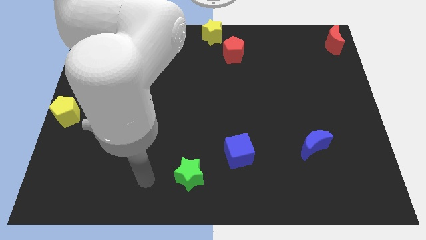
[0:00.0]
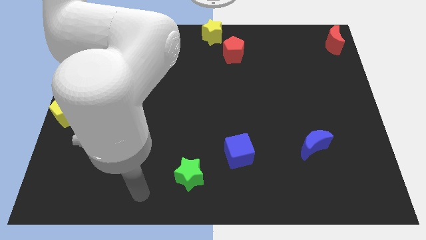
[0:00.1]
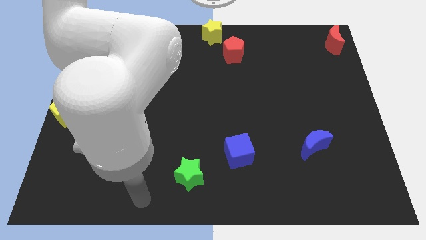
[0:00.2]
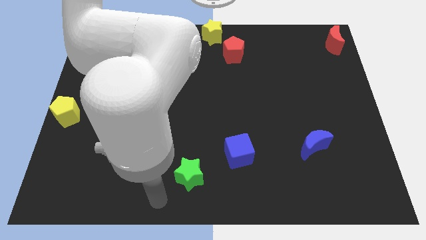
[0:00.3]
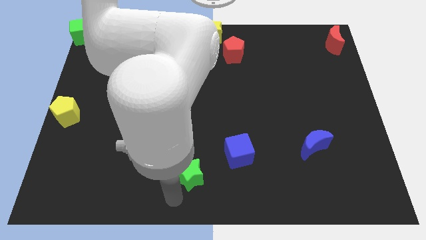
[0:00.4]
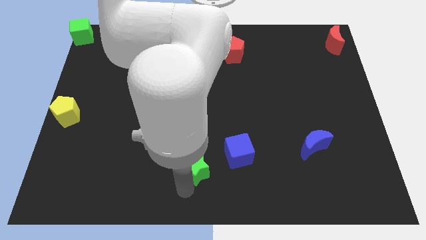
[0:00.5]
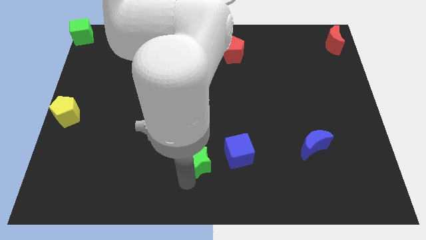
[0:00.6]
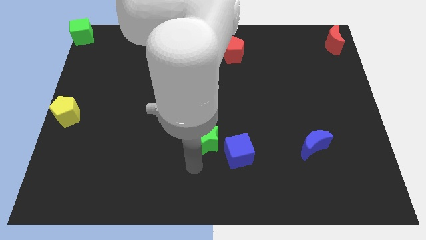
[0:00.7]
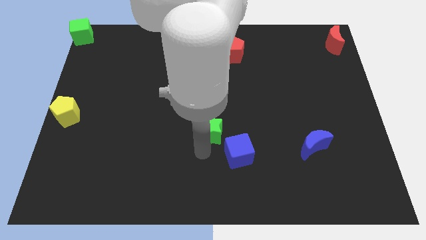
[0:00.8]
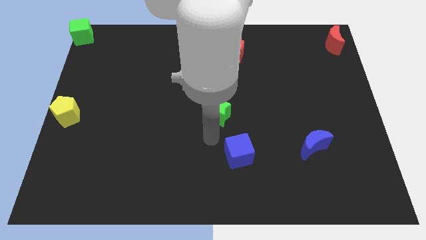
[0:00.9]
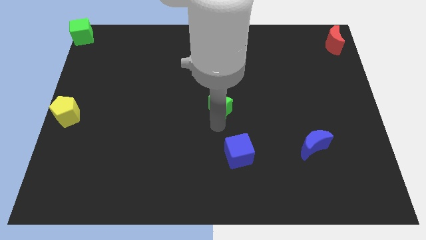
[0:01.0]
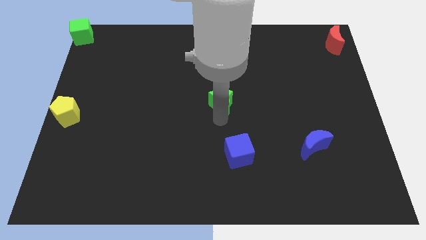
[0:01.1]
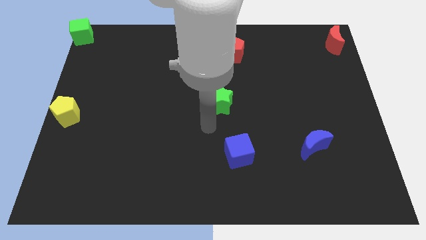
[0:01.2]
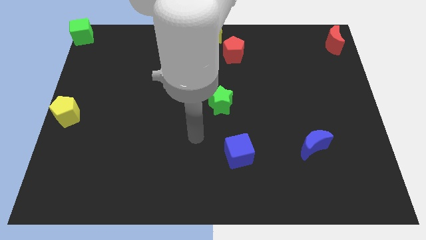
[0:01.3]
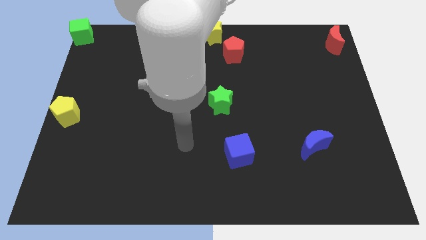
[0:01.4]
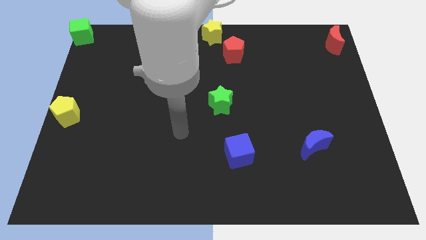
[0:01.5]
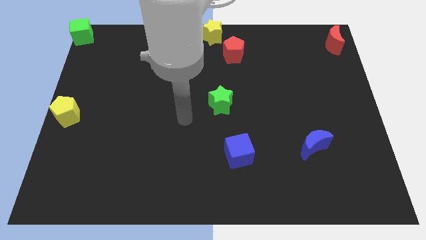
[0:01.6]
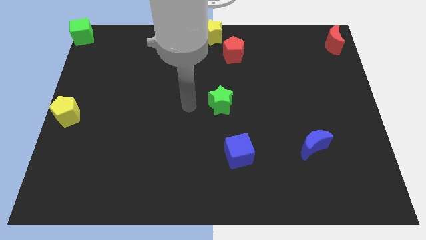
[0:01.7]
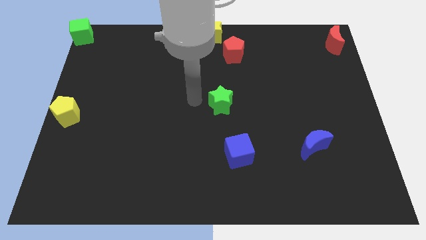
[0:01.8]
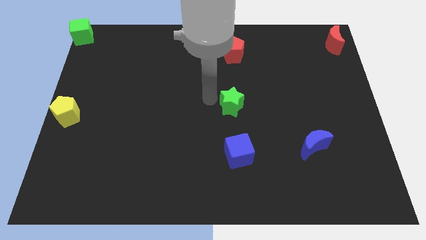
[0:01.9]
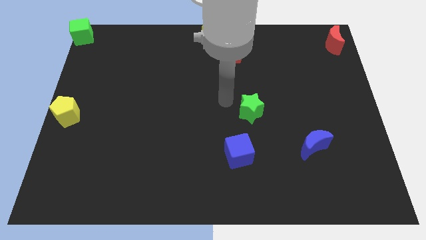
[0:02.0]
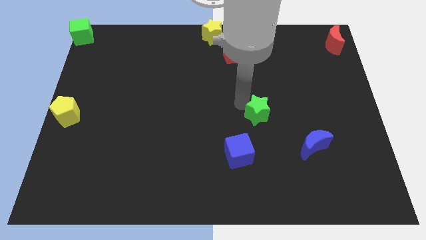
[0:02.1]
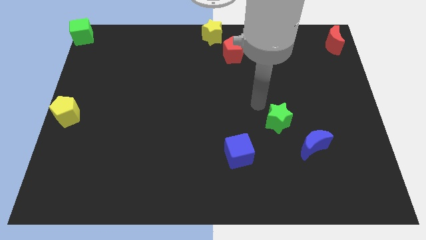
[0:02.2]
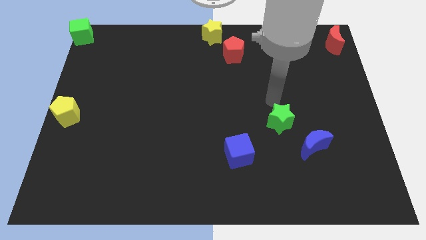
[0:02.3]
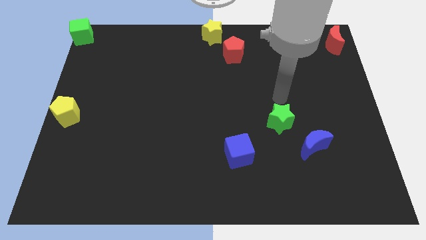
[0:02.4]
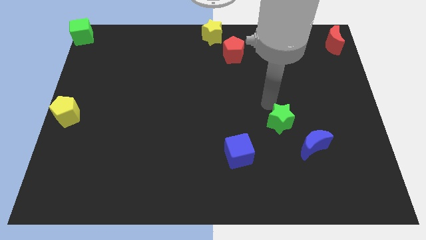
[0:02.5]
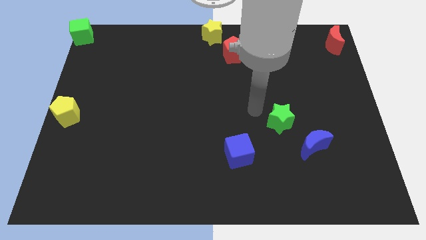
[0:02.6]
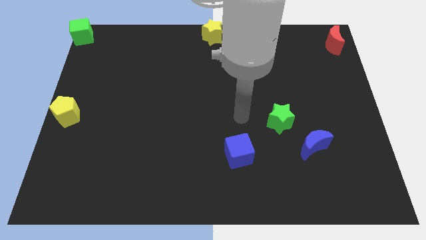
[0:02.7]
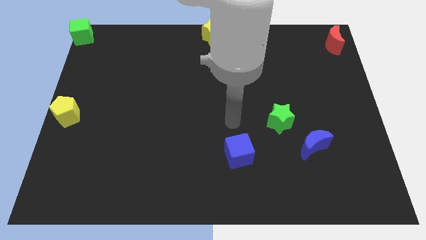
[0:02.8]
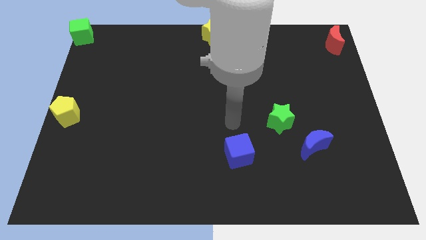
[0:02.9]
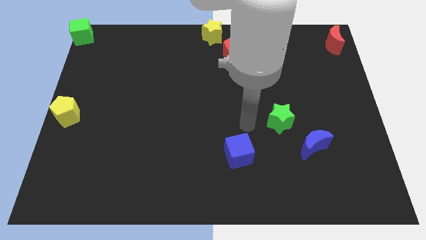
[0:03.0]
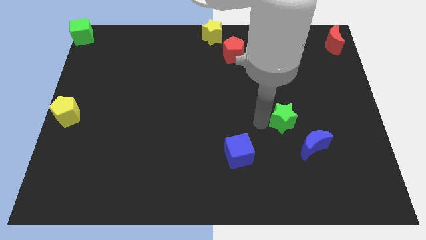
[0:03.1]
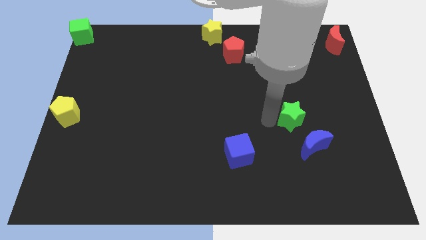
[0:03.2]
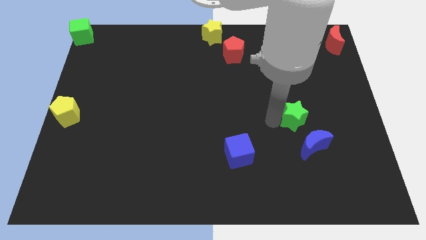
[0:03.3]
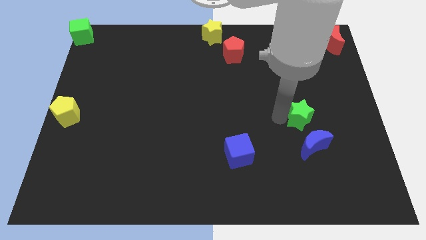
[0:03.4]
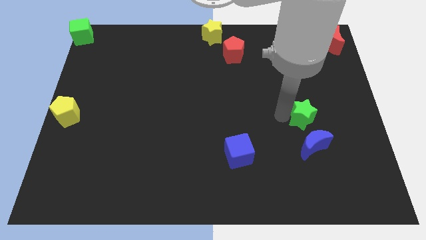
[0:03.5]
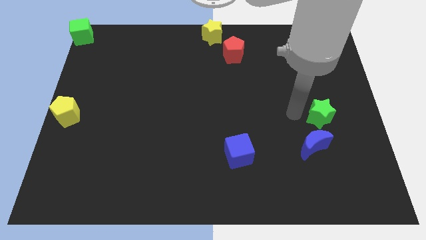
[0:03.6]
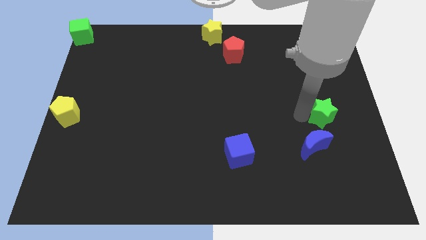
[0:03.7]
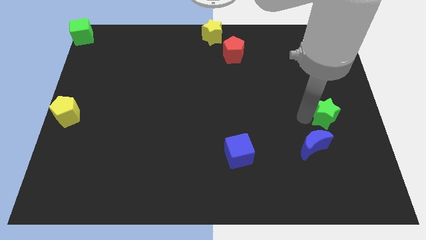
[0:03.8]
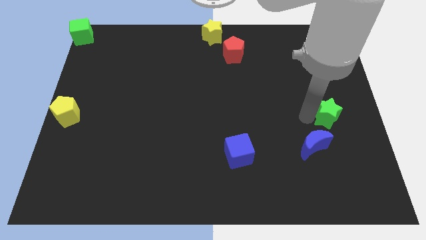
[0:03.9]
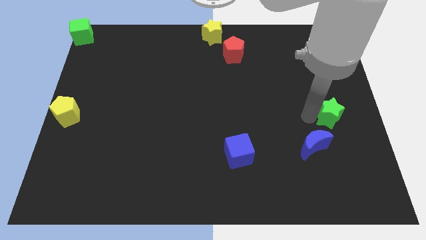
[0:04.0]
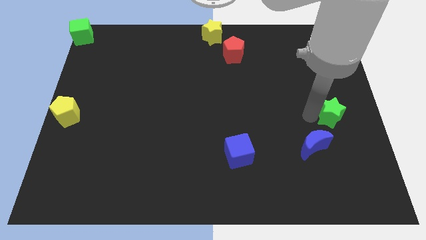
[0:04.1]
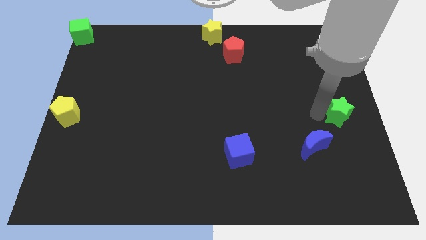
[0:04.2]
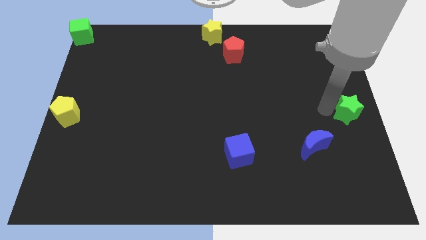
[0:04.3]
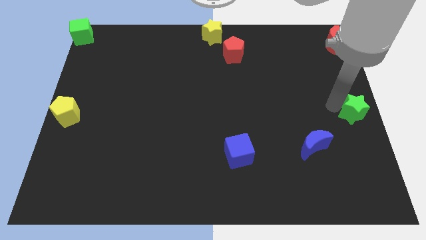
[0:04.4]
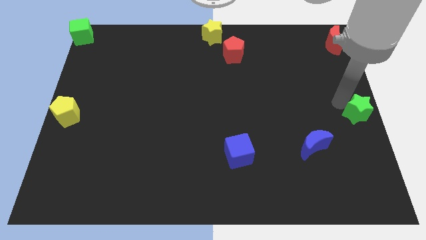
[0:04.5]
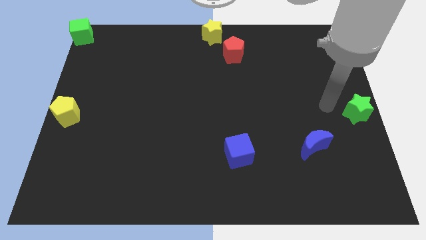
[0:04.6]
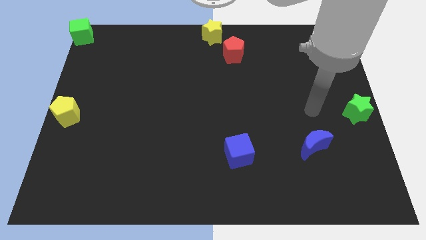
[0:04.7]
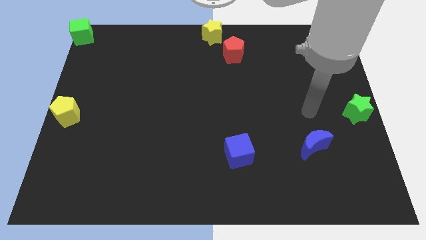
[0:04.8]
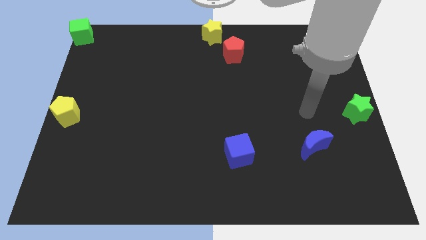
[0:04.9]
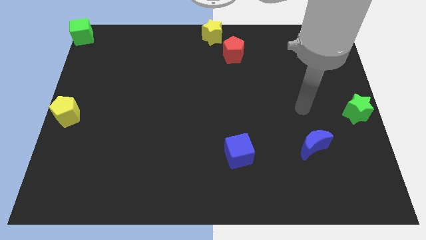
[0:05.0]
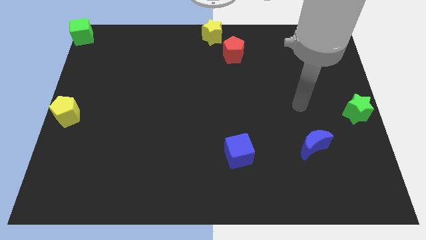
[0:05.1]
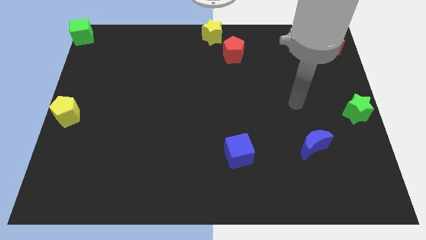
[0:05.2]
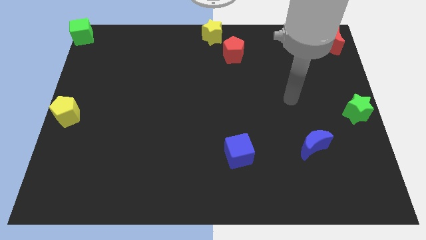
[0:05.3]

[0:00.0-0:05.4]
place the green star to the right center of the board

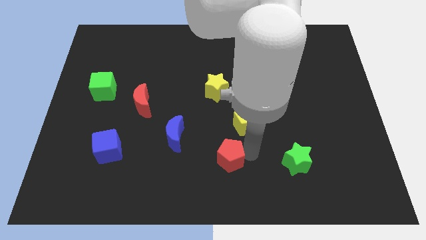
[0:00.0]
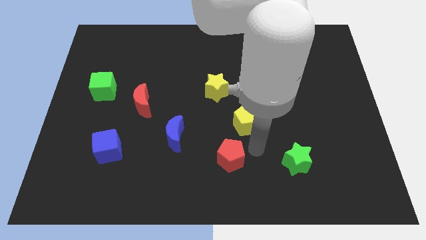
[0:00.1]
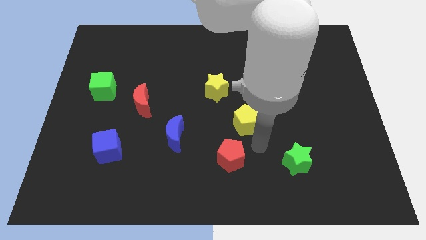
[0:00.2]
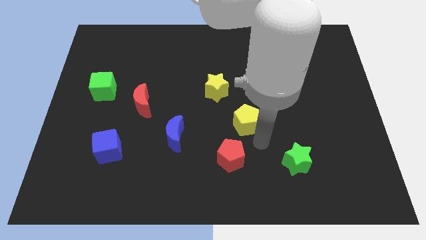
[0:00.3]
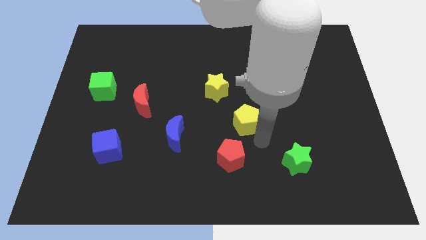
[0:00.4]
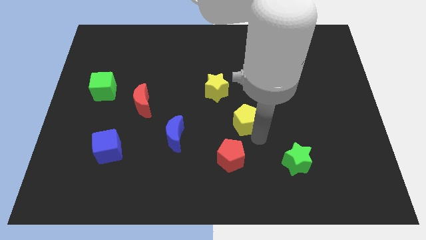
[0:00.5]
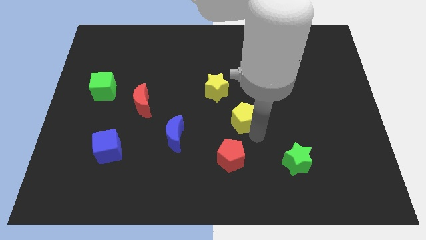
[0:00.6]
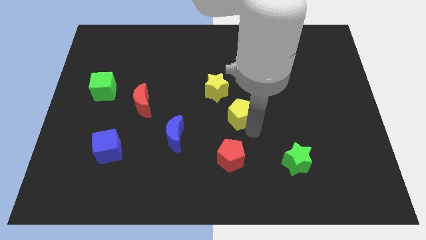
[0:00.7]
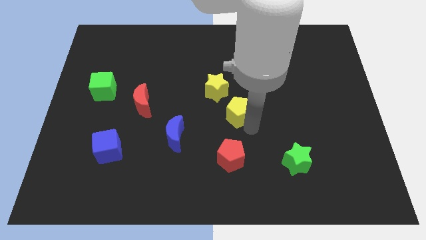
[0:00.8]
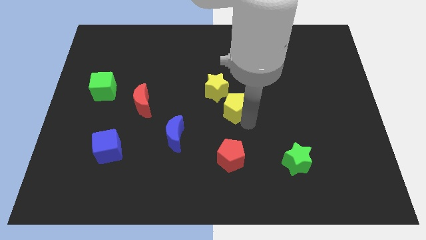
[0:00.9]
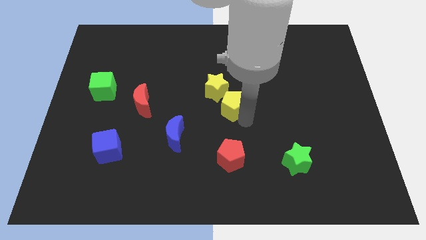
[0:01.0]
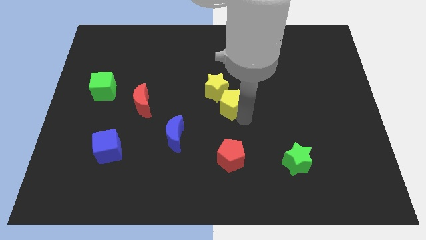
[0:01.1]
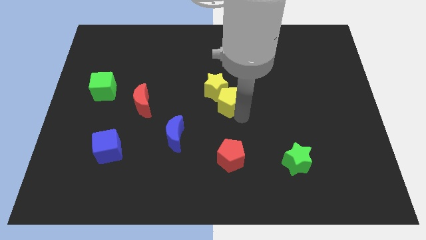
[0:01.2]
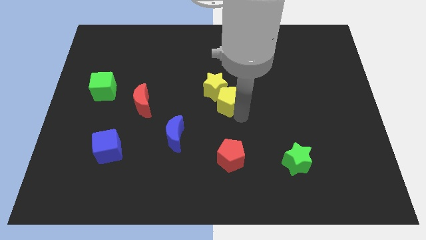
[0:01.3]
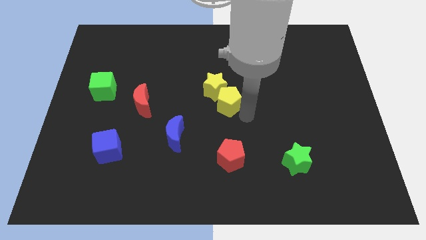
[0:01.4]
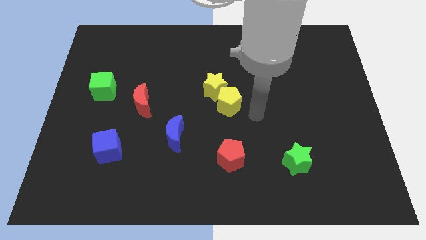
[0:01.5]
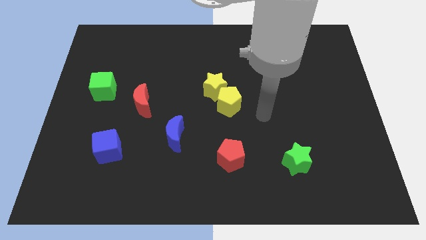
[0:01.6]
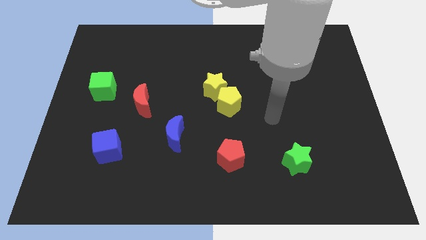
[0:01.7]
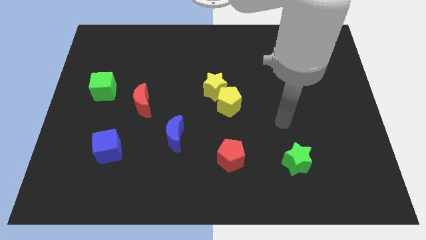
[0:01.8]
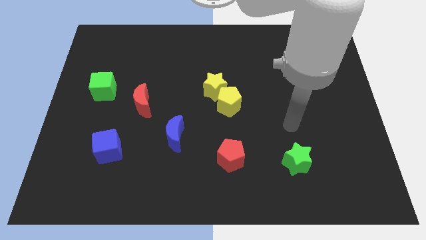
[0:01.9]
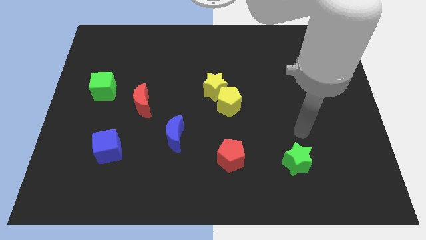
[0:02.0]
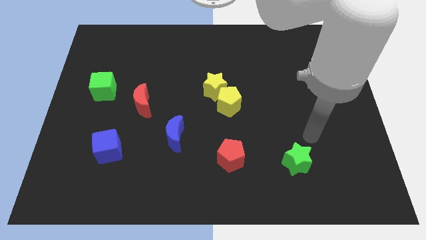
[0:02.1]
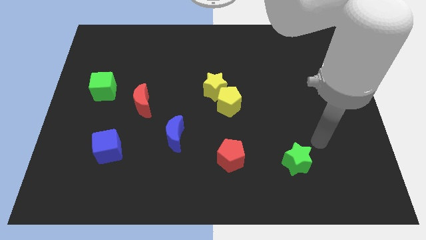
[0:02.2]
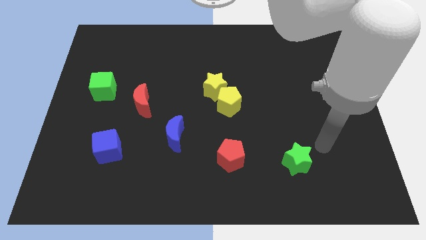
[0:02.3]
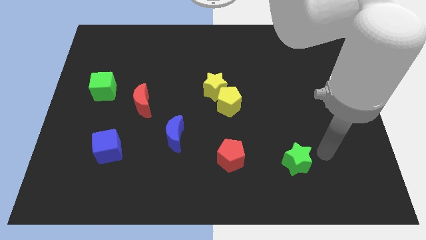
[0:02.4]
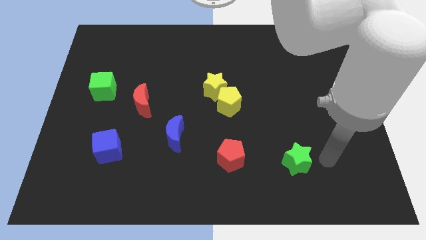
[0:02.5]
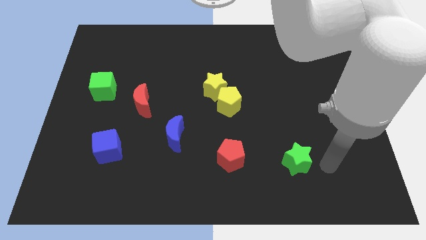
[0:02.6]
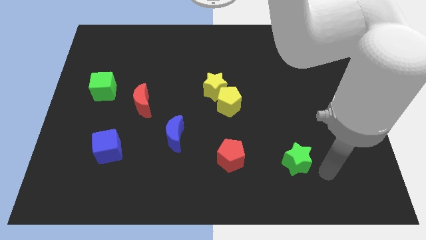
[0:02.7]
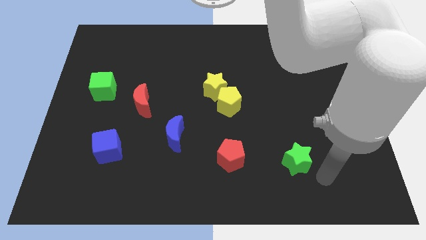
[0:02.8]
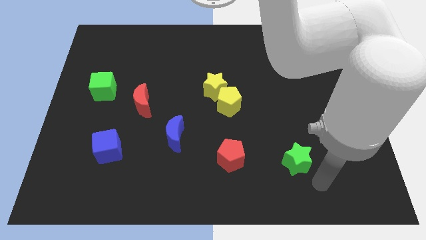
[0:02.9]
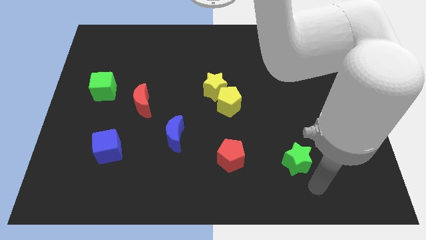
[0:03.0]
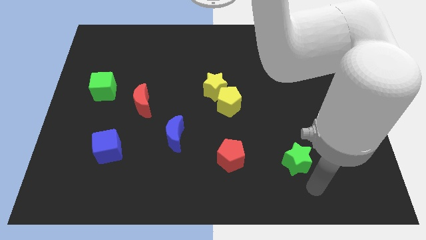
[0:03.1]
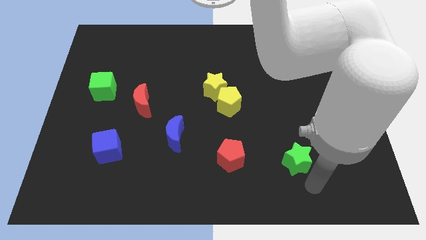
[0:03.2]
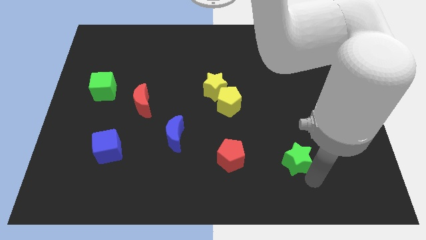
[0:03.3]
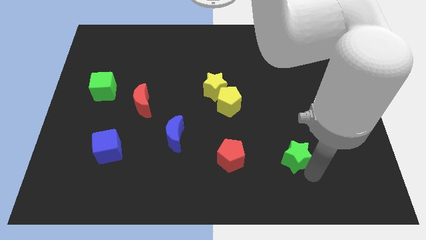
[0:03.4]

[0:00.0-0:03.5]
push the yellow pentagon to the center of the board

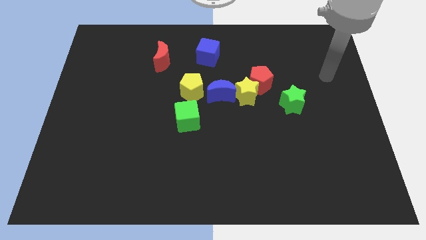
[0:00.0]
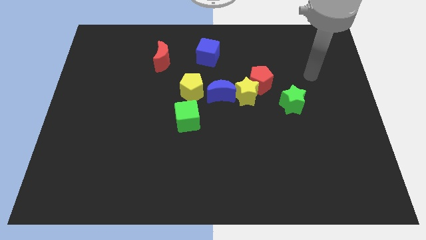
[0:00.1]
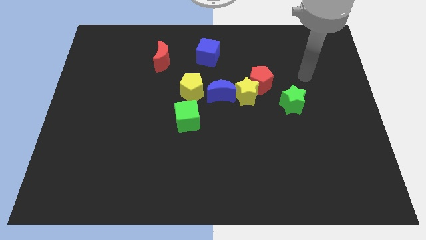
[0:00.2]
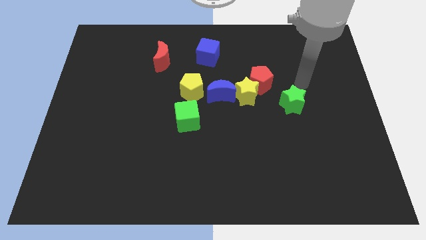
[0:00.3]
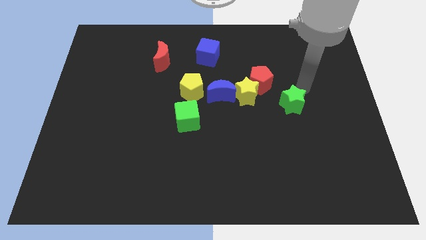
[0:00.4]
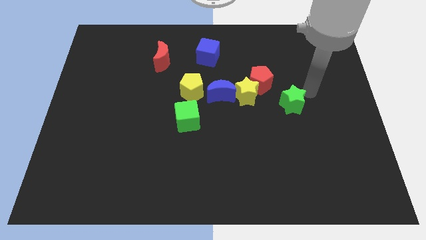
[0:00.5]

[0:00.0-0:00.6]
go near the green star
